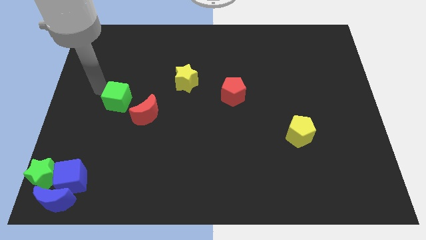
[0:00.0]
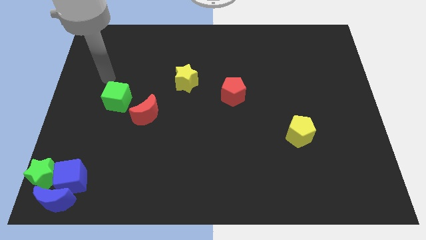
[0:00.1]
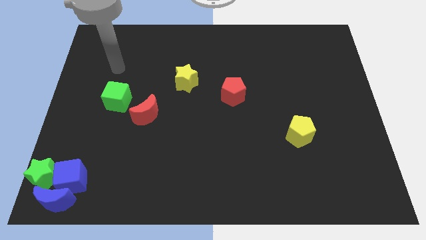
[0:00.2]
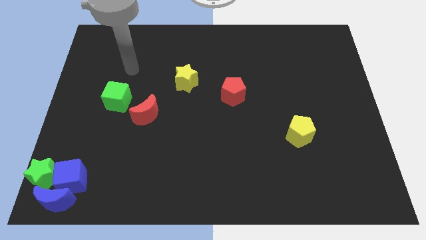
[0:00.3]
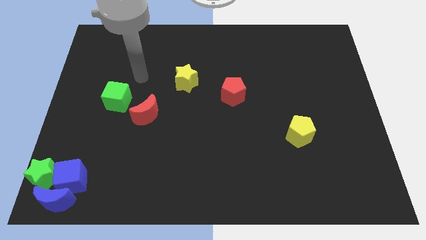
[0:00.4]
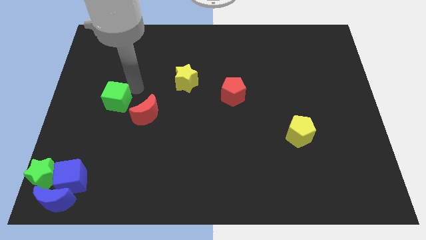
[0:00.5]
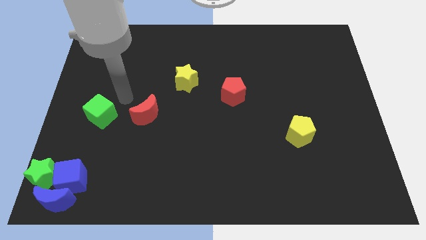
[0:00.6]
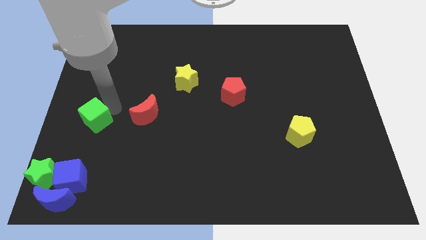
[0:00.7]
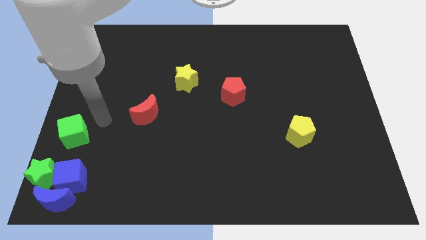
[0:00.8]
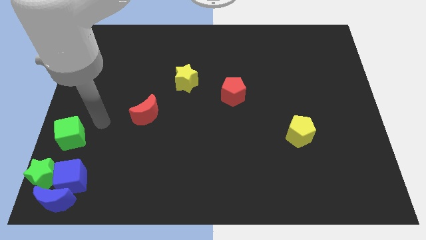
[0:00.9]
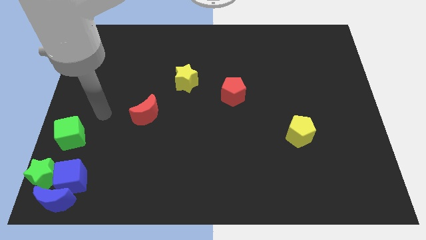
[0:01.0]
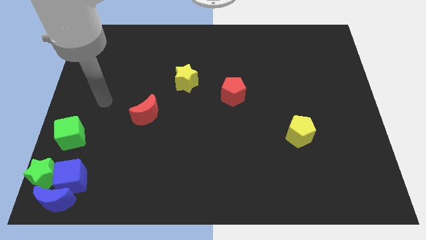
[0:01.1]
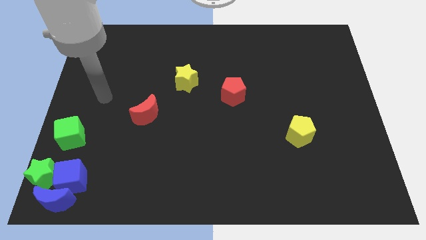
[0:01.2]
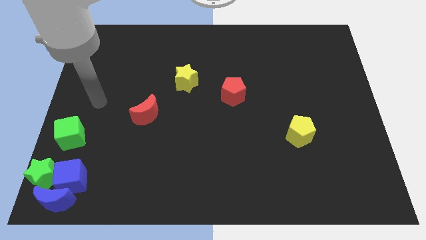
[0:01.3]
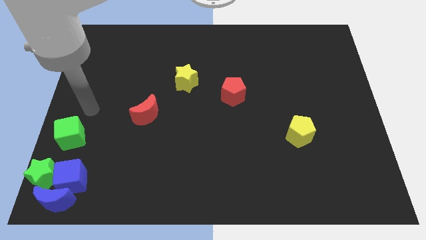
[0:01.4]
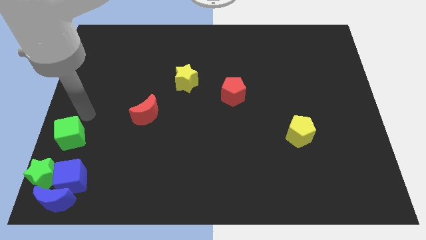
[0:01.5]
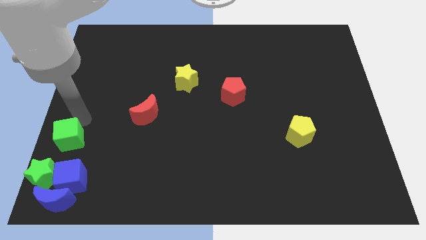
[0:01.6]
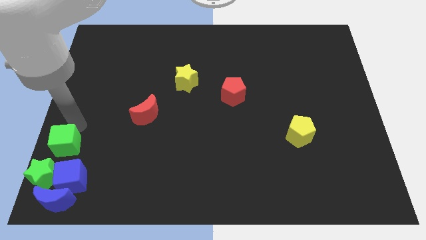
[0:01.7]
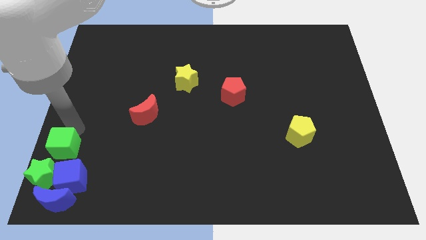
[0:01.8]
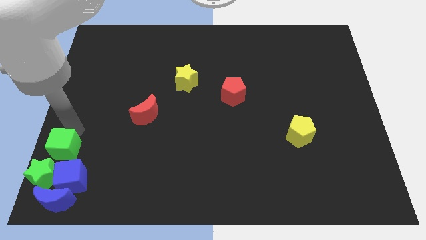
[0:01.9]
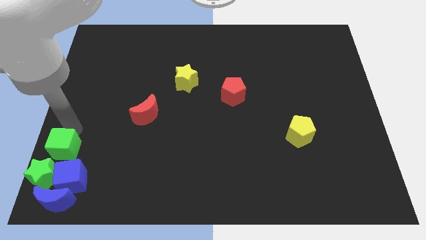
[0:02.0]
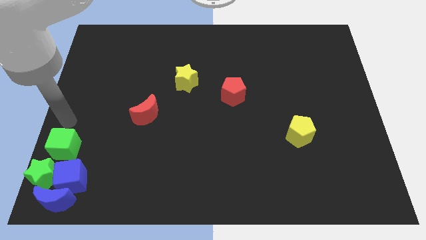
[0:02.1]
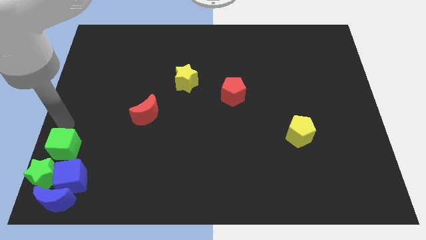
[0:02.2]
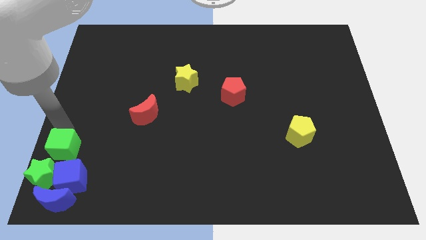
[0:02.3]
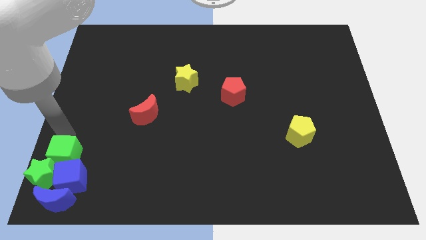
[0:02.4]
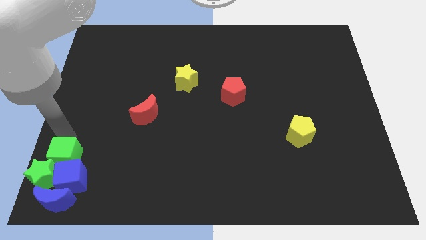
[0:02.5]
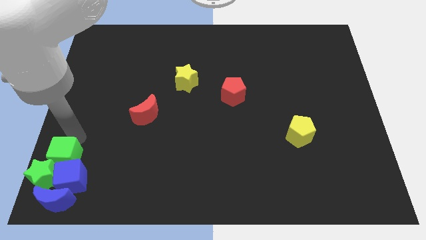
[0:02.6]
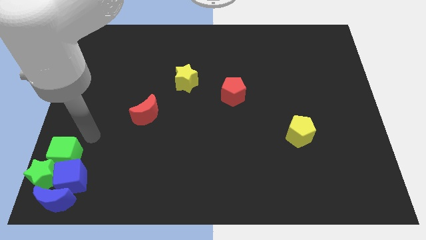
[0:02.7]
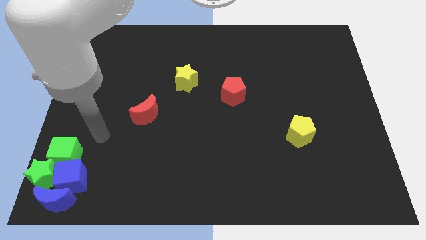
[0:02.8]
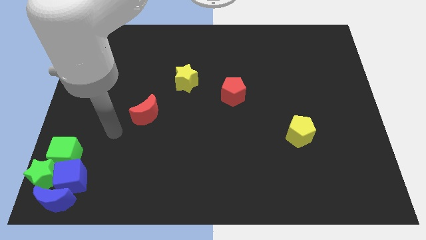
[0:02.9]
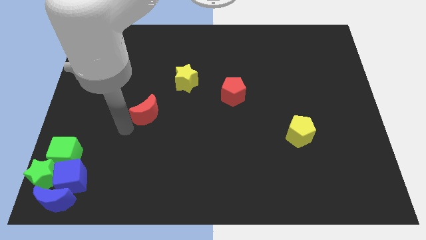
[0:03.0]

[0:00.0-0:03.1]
add the green cube to the group of blue blocks and green star

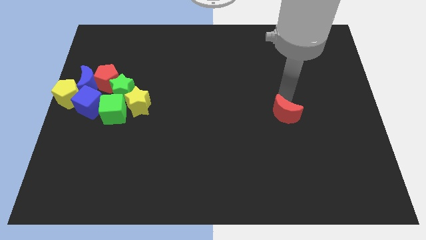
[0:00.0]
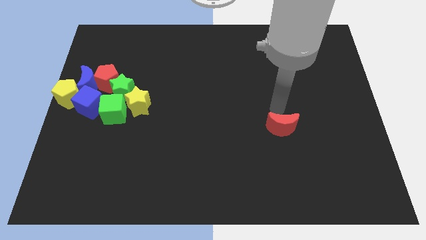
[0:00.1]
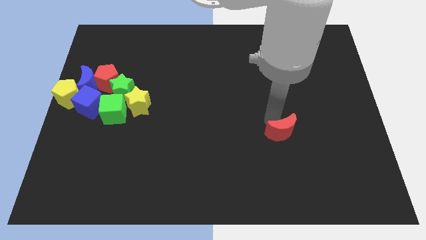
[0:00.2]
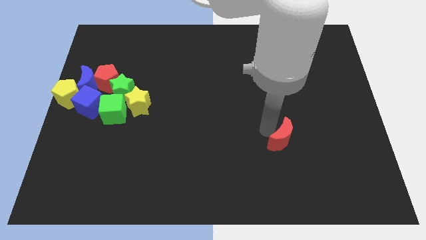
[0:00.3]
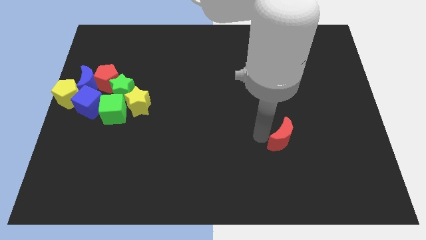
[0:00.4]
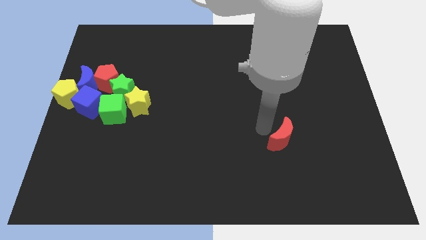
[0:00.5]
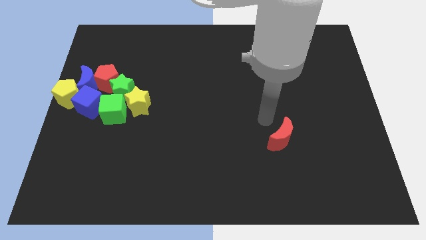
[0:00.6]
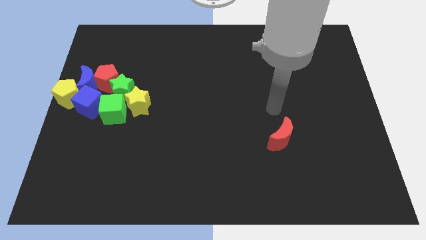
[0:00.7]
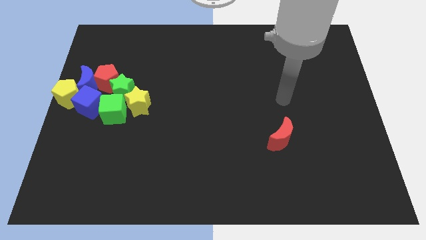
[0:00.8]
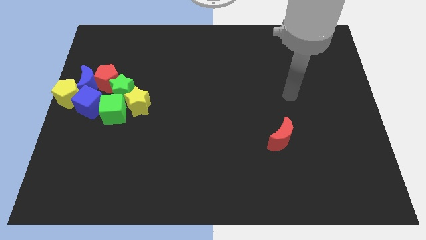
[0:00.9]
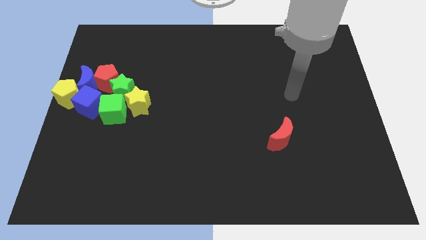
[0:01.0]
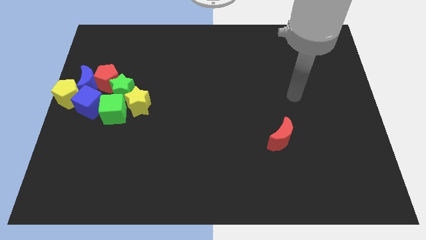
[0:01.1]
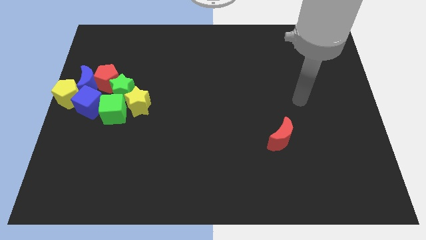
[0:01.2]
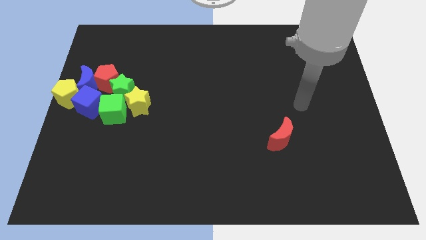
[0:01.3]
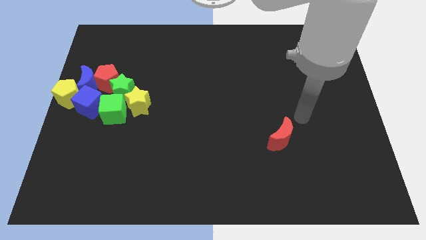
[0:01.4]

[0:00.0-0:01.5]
push the red crescent slightly towards the bottom

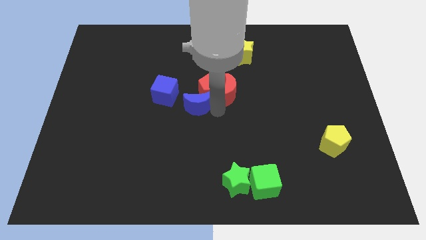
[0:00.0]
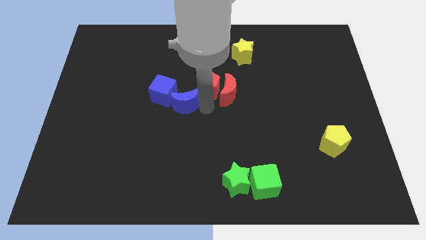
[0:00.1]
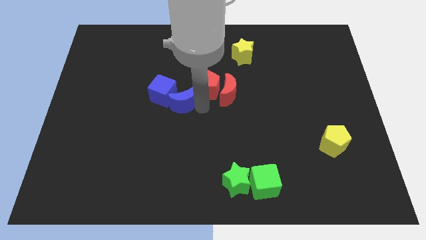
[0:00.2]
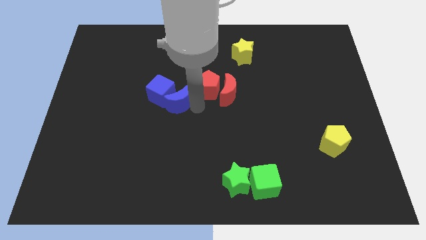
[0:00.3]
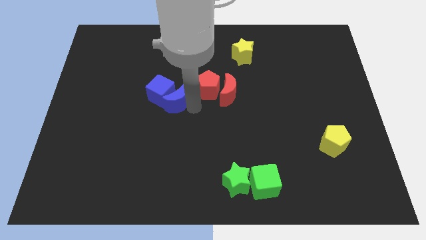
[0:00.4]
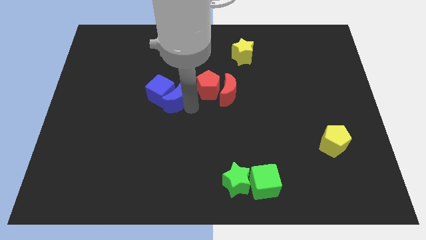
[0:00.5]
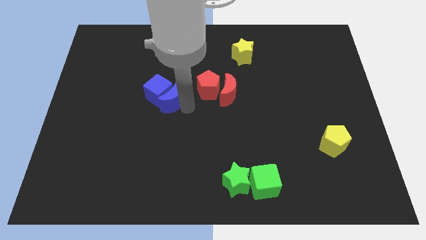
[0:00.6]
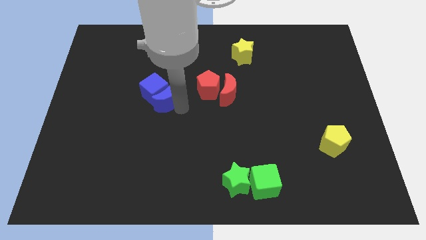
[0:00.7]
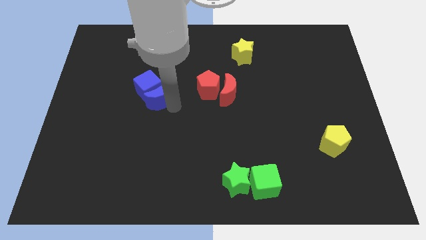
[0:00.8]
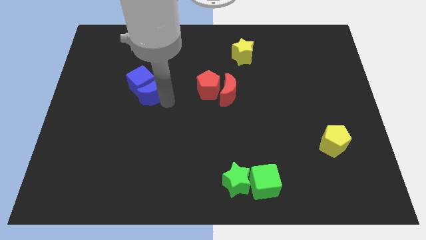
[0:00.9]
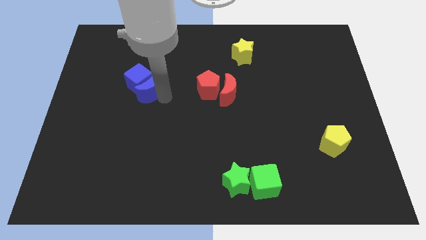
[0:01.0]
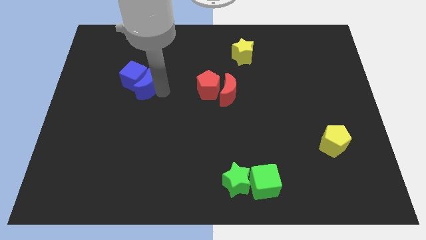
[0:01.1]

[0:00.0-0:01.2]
push the blue crescent to the right side of the blue cube on the board

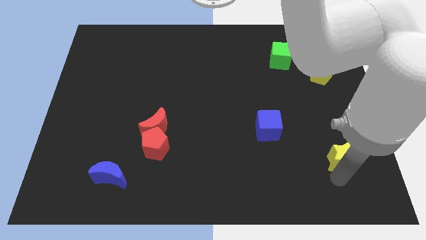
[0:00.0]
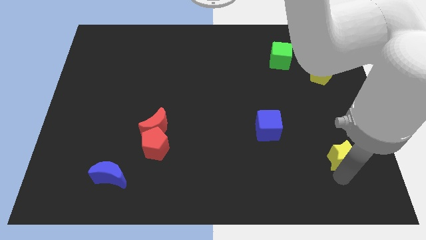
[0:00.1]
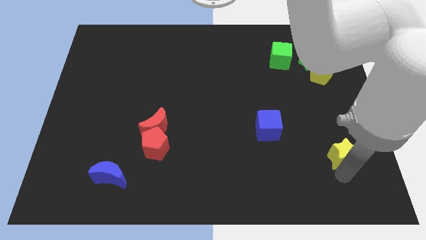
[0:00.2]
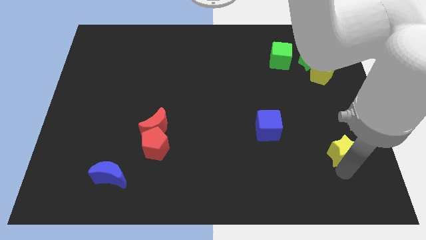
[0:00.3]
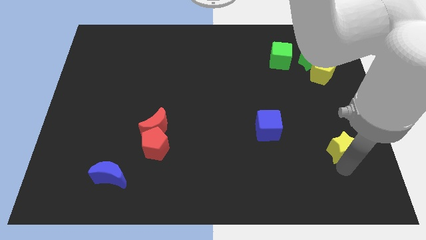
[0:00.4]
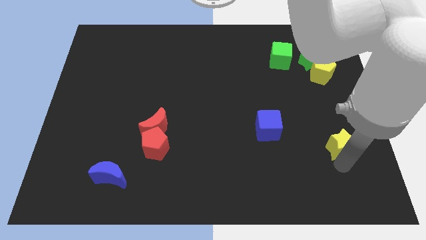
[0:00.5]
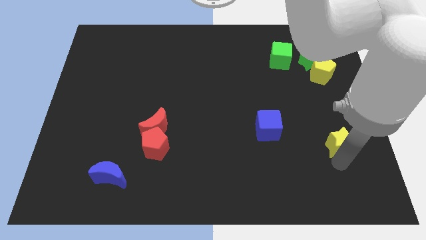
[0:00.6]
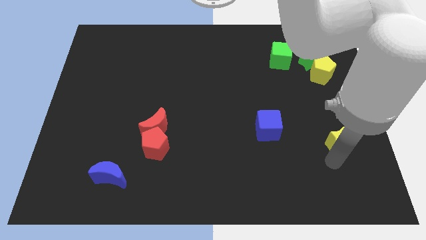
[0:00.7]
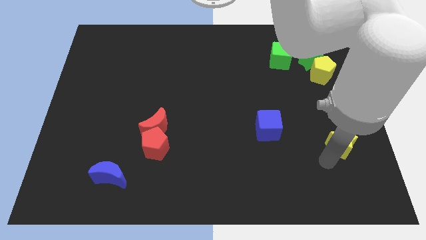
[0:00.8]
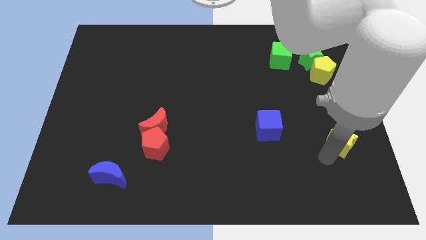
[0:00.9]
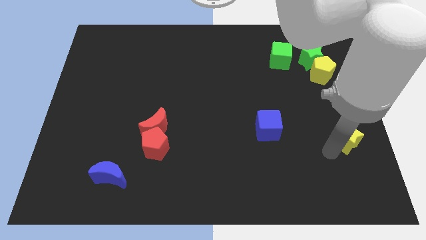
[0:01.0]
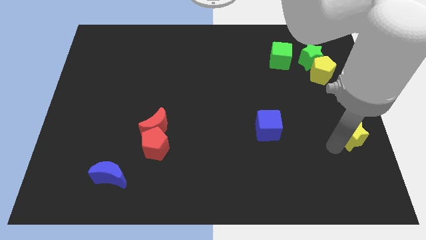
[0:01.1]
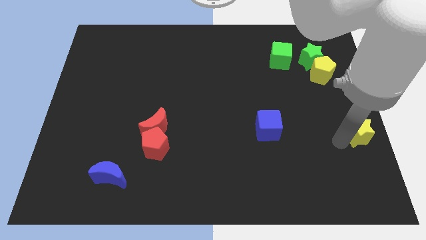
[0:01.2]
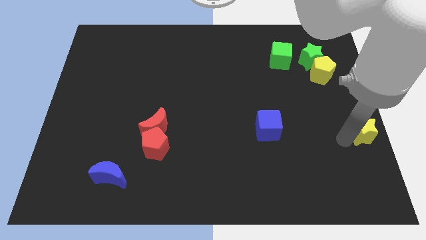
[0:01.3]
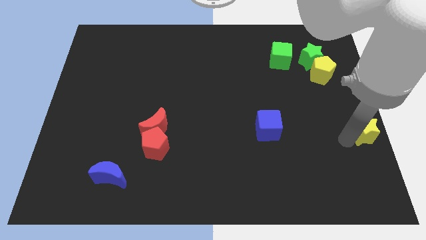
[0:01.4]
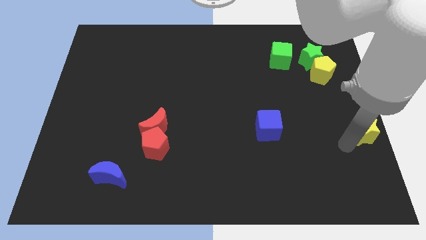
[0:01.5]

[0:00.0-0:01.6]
place yellow star to the right of blue cube

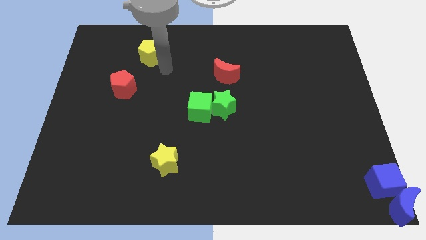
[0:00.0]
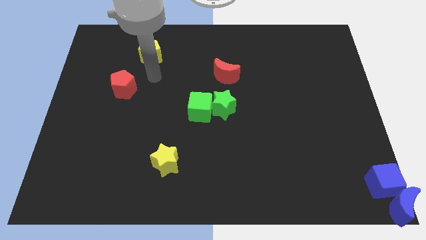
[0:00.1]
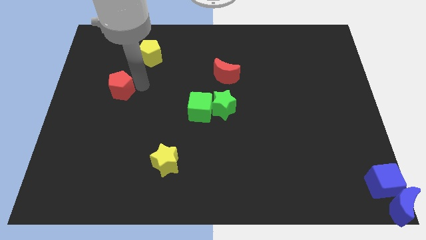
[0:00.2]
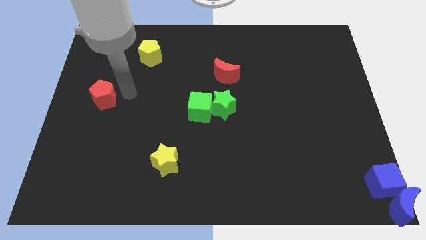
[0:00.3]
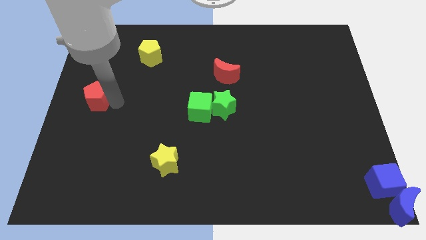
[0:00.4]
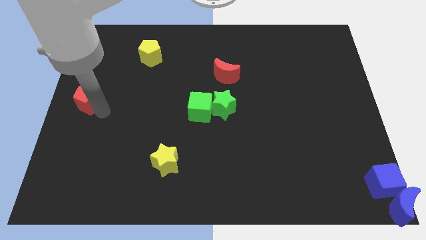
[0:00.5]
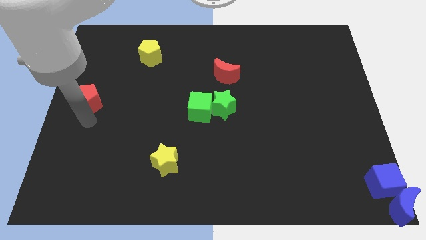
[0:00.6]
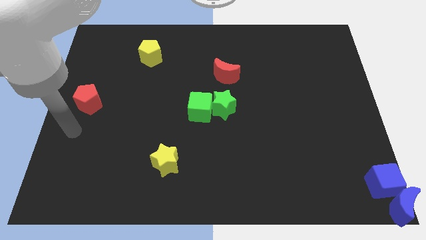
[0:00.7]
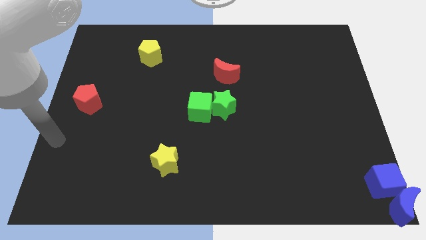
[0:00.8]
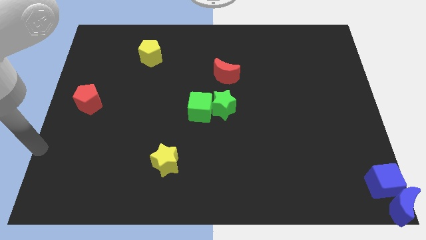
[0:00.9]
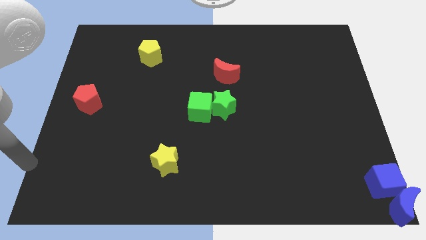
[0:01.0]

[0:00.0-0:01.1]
push the red pentagon to the left center of the board

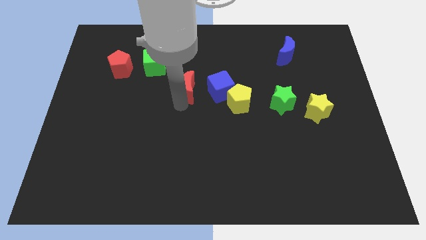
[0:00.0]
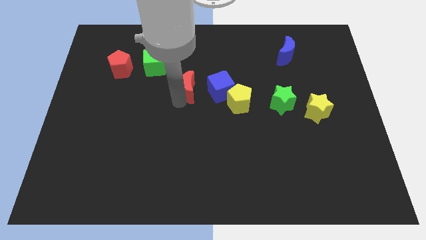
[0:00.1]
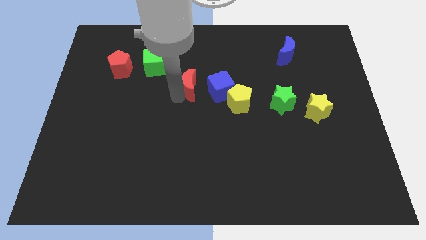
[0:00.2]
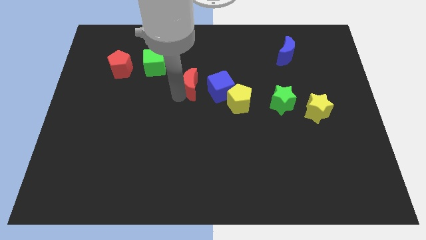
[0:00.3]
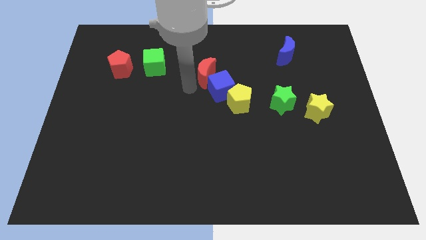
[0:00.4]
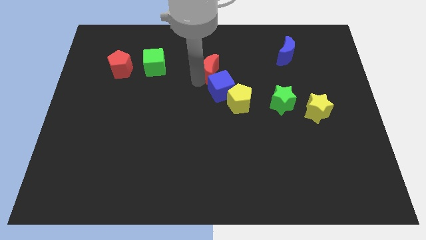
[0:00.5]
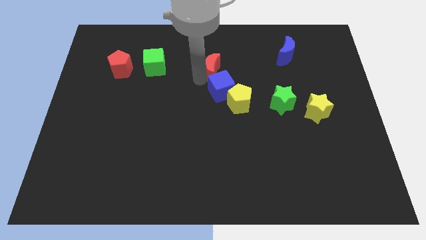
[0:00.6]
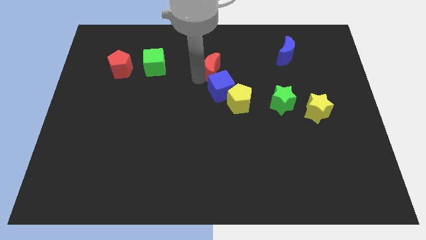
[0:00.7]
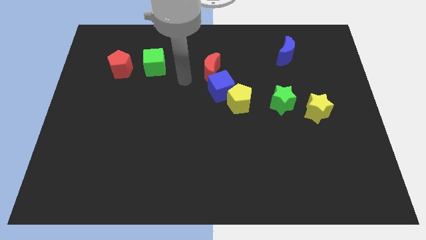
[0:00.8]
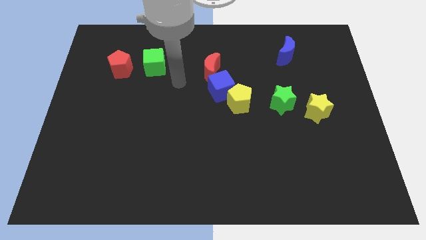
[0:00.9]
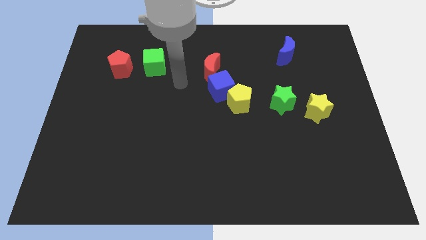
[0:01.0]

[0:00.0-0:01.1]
push red moon above the blue cube
